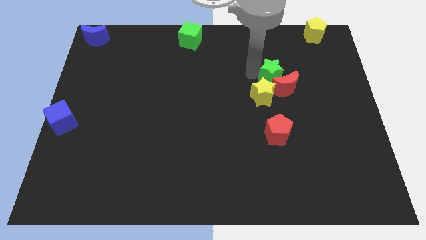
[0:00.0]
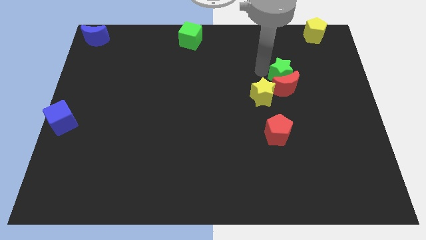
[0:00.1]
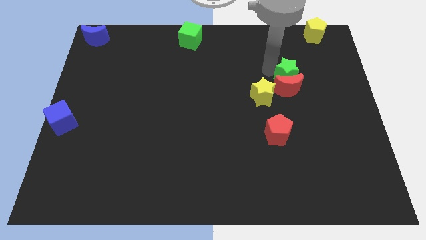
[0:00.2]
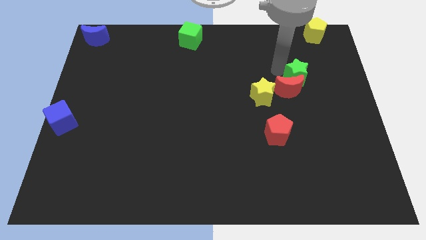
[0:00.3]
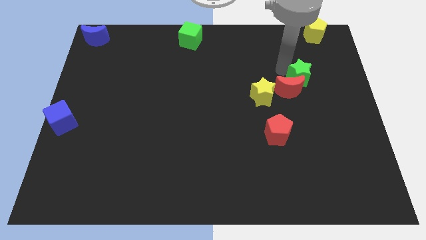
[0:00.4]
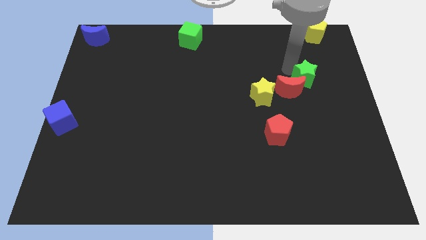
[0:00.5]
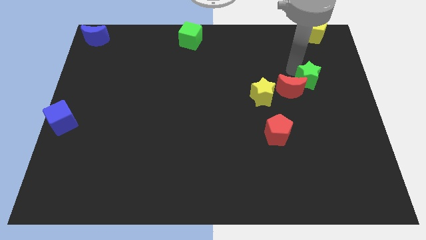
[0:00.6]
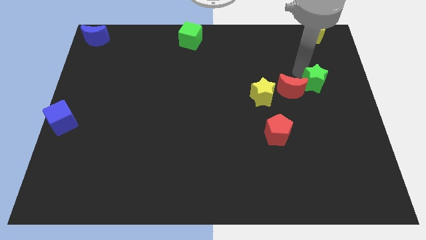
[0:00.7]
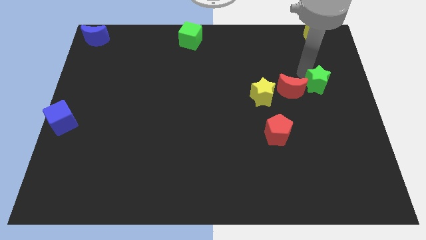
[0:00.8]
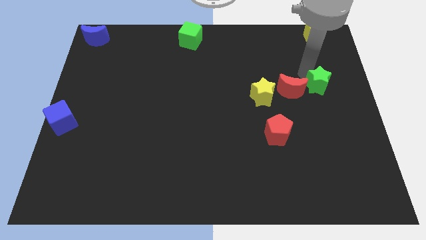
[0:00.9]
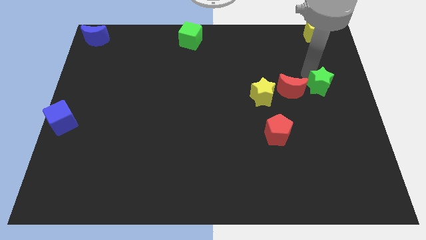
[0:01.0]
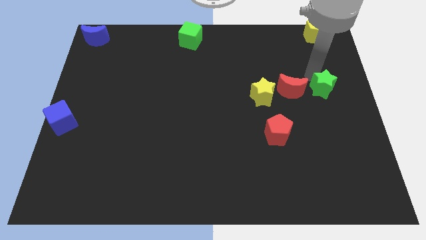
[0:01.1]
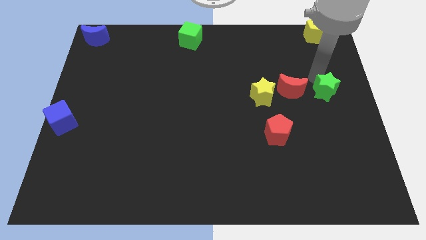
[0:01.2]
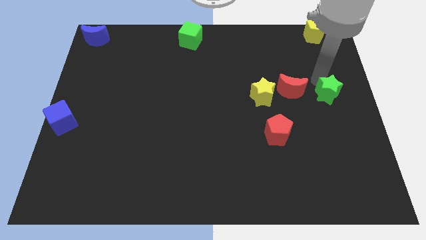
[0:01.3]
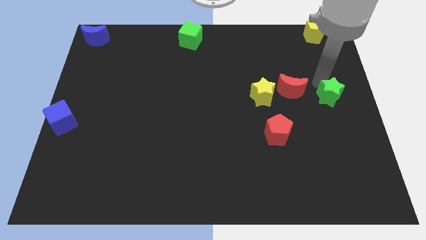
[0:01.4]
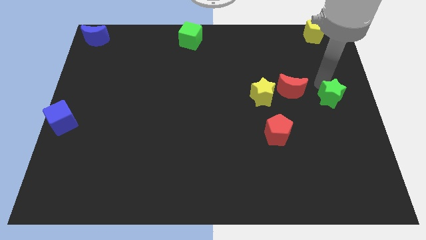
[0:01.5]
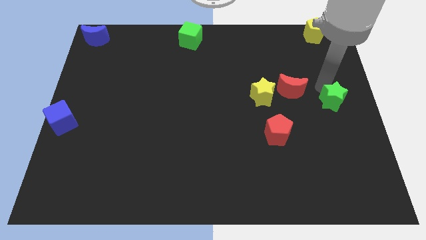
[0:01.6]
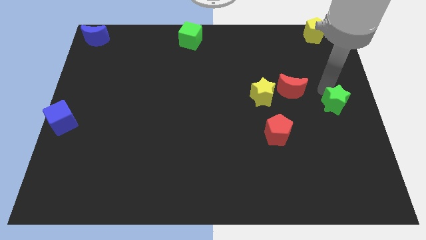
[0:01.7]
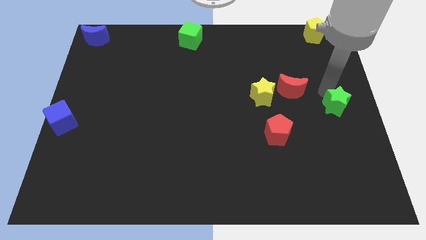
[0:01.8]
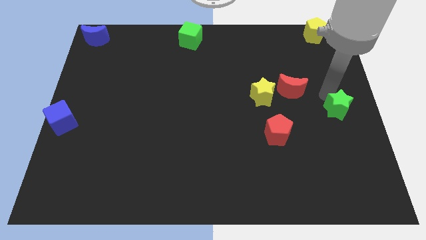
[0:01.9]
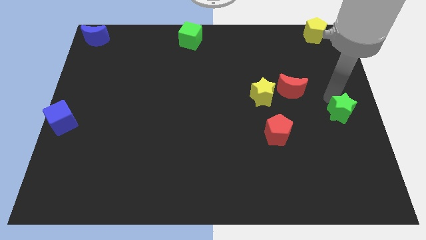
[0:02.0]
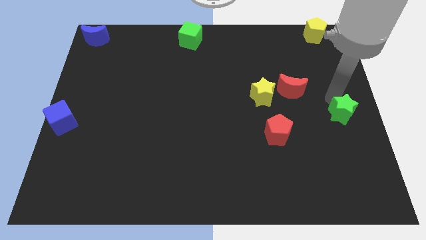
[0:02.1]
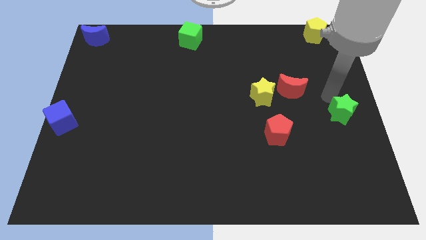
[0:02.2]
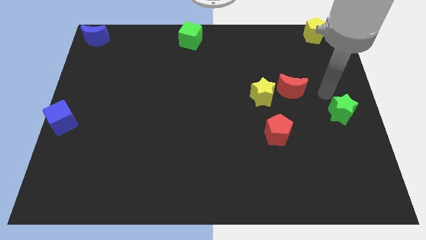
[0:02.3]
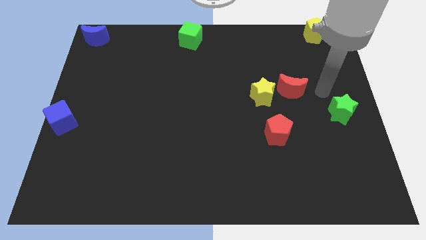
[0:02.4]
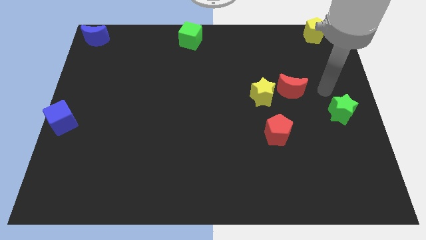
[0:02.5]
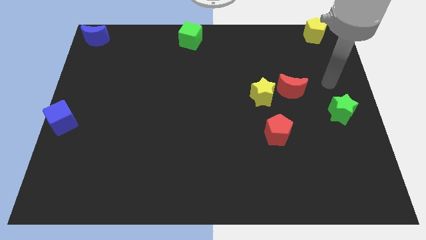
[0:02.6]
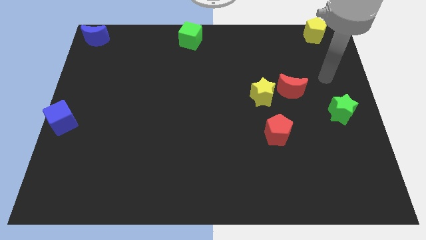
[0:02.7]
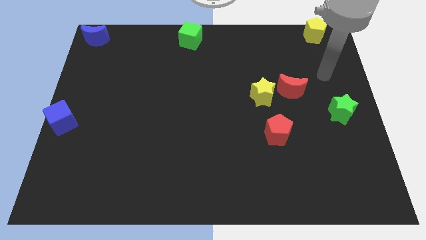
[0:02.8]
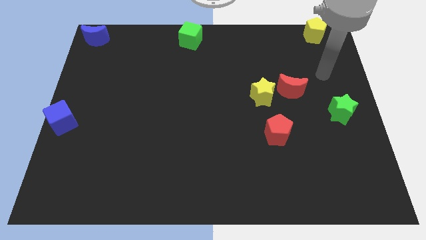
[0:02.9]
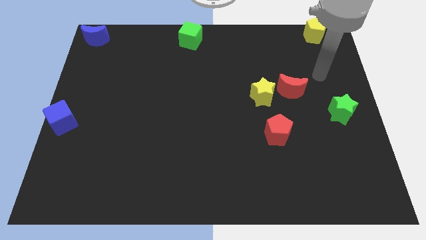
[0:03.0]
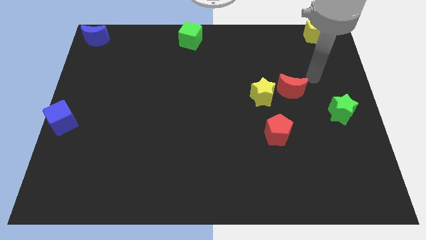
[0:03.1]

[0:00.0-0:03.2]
move the green star to the bottom right of the red crescent

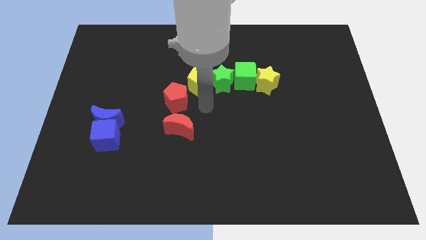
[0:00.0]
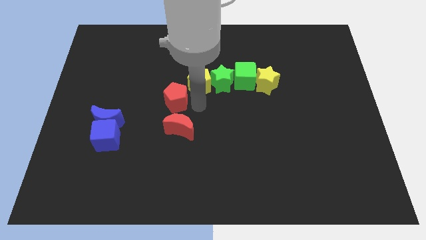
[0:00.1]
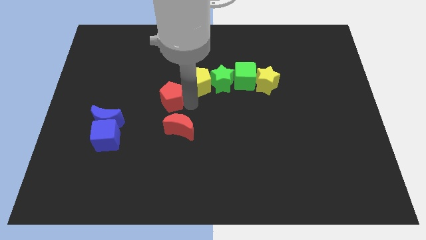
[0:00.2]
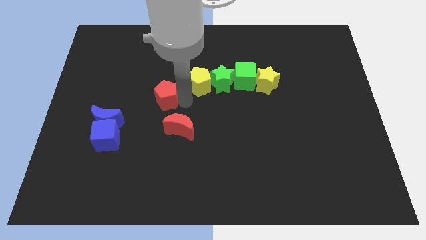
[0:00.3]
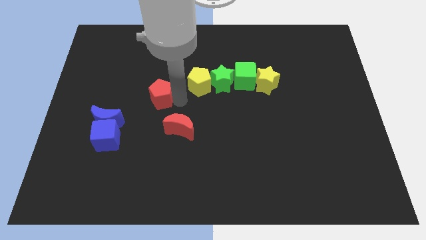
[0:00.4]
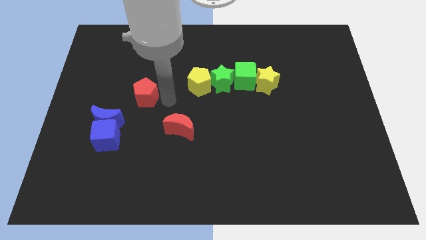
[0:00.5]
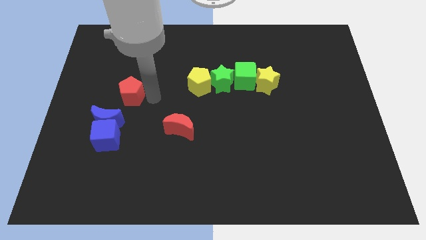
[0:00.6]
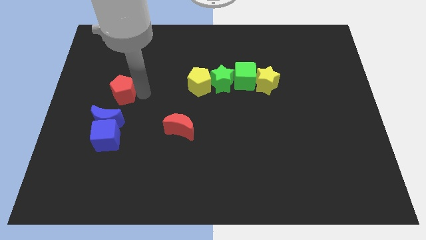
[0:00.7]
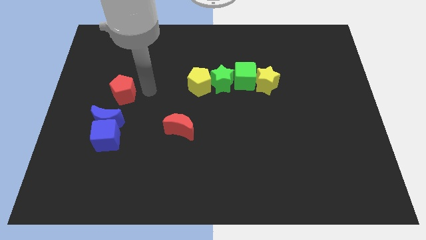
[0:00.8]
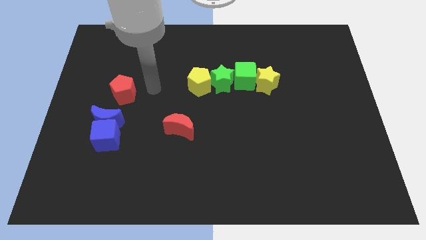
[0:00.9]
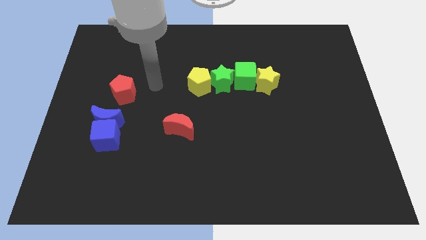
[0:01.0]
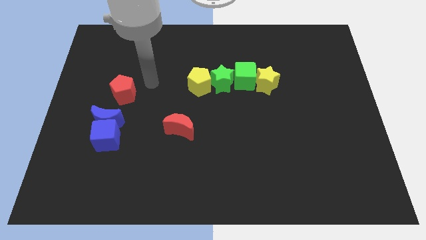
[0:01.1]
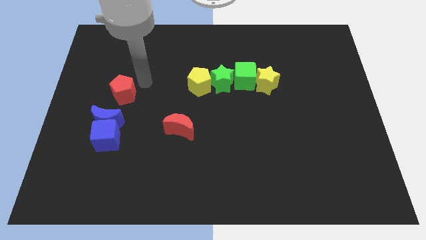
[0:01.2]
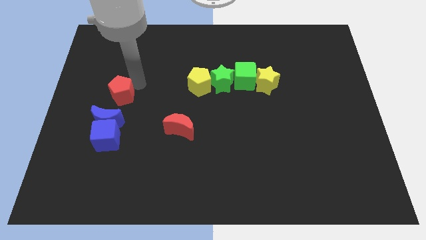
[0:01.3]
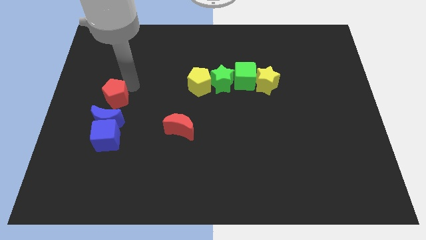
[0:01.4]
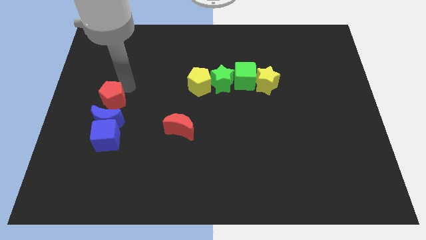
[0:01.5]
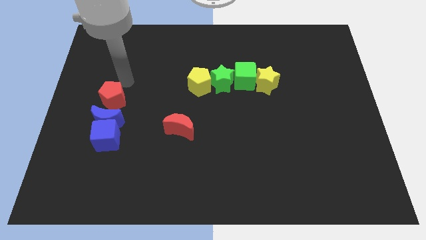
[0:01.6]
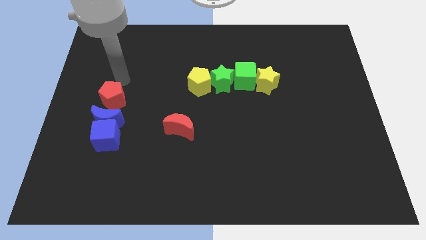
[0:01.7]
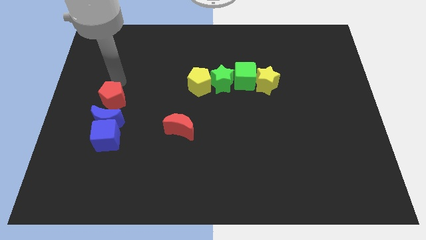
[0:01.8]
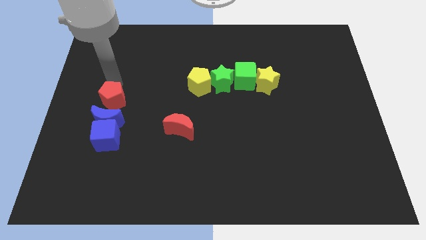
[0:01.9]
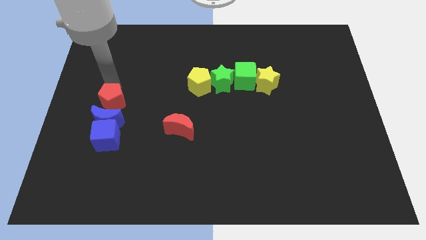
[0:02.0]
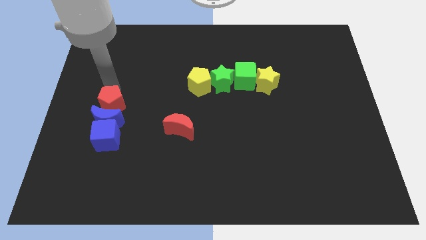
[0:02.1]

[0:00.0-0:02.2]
place the red pentagon on top side of the blue crescent

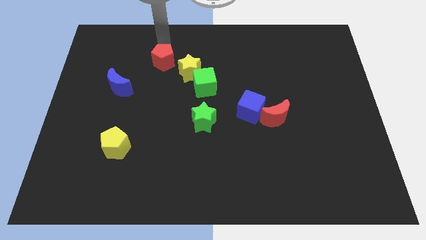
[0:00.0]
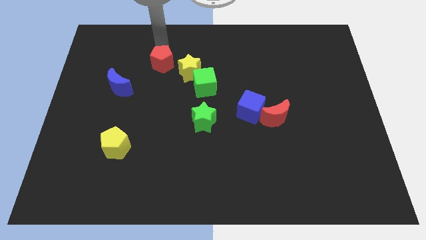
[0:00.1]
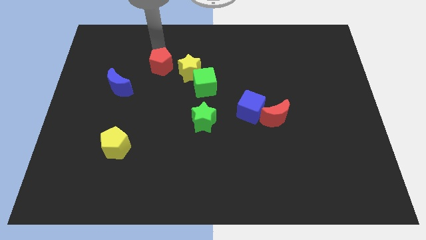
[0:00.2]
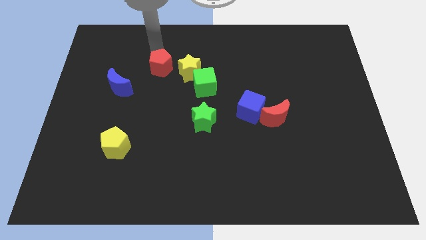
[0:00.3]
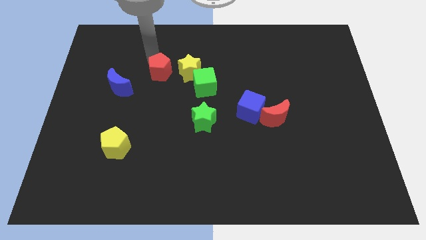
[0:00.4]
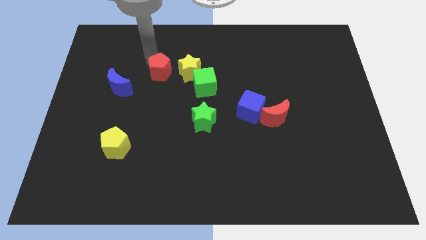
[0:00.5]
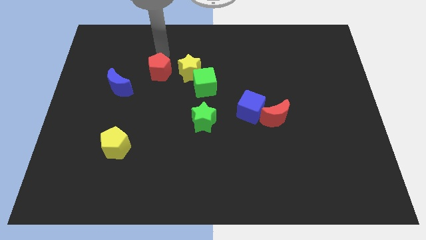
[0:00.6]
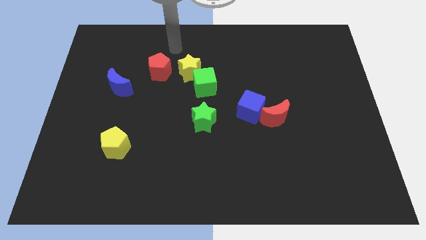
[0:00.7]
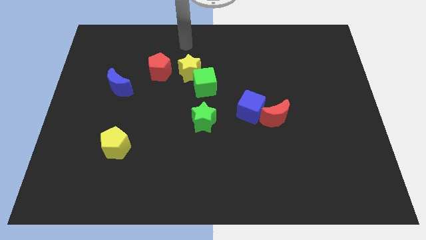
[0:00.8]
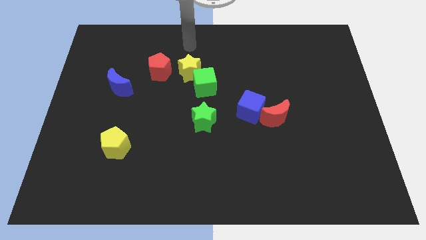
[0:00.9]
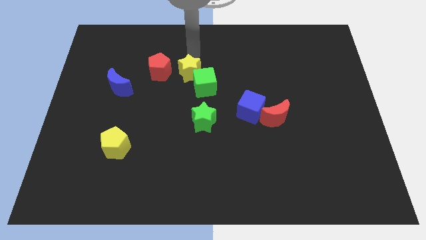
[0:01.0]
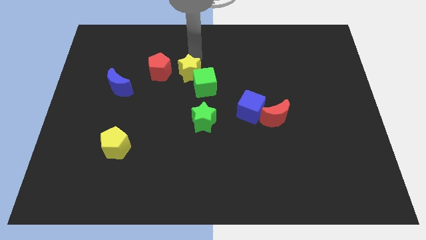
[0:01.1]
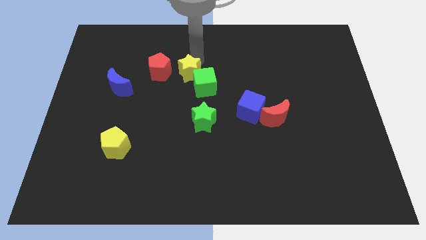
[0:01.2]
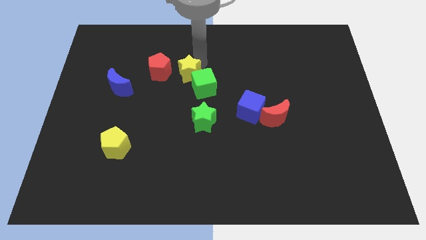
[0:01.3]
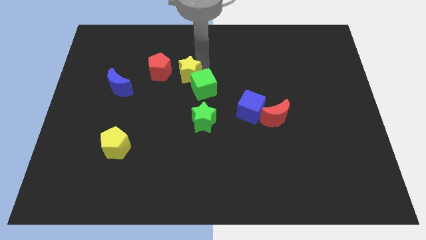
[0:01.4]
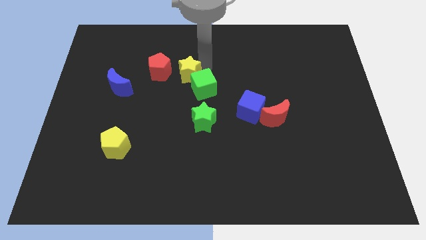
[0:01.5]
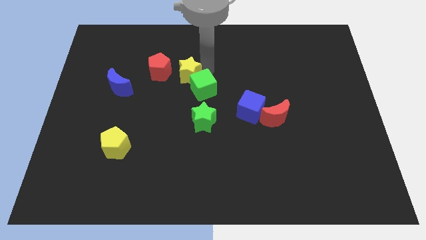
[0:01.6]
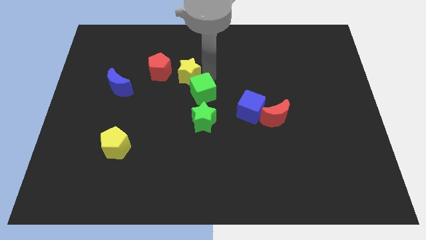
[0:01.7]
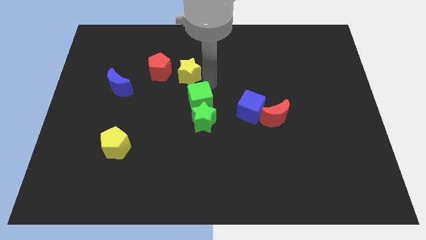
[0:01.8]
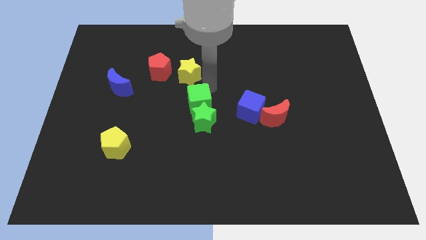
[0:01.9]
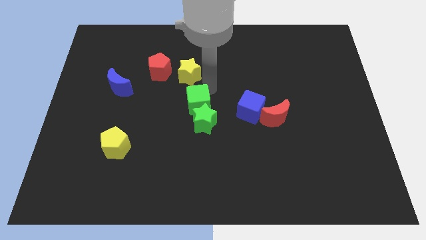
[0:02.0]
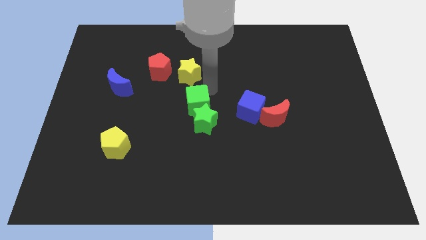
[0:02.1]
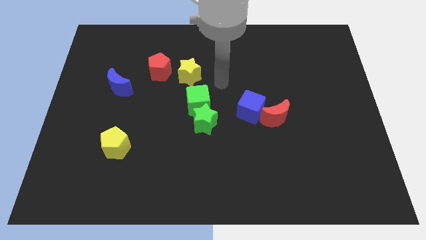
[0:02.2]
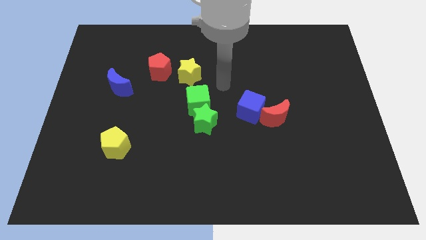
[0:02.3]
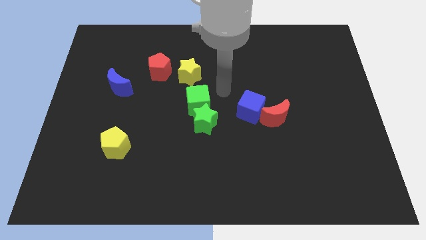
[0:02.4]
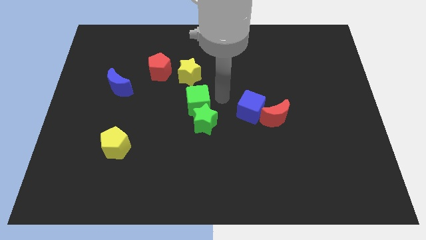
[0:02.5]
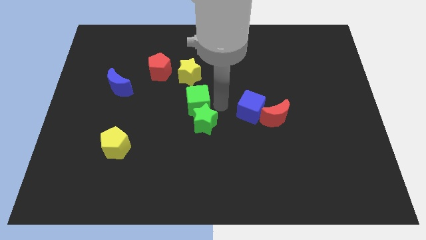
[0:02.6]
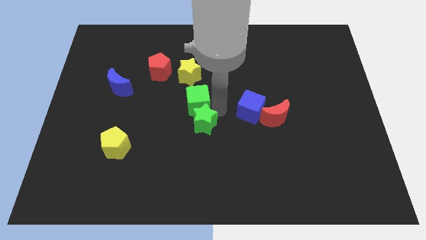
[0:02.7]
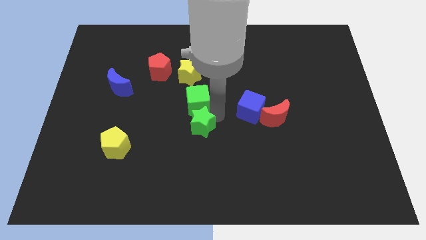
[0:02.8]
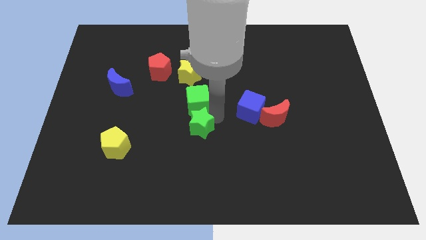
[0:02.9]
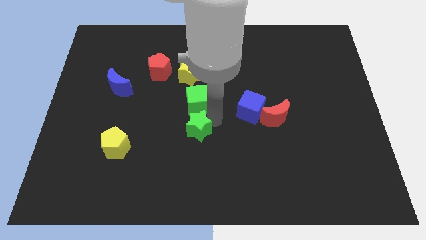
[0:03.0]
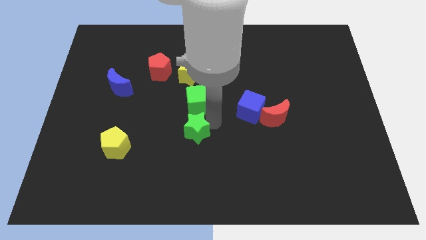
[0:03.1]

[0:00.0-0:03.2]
push the green cube into the green star

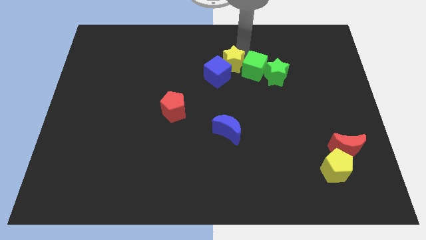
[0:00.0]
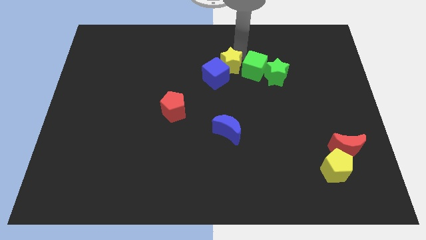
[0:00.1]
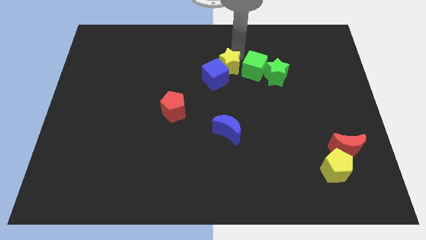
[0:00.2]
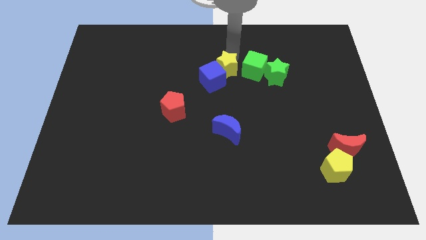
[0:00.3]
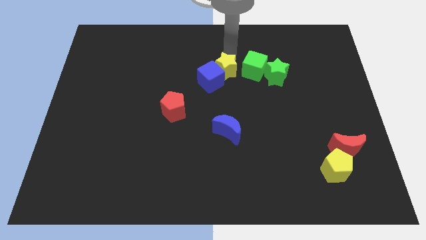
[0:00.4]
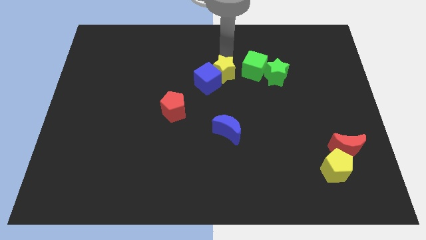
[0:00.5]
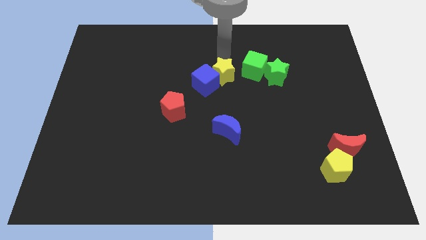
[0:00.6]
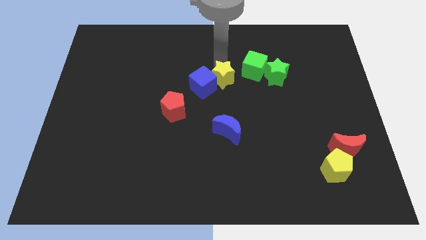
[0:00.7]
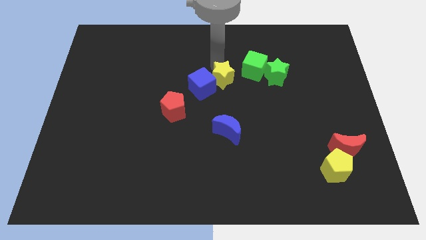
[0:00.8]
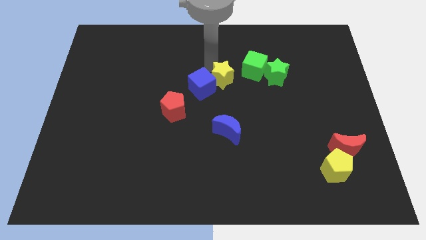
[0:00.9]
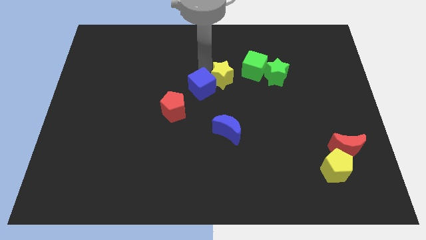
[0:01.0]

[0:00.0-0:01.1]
push the yellow star and blue cube away from the green cube
